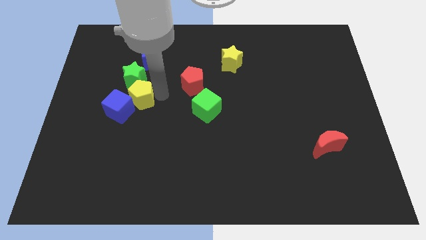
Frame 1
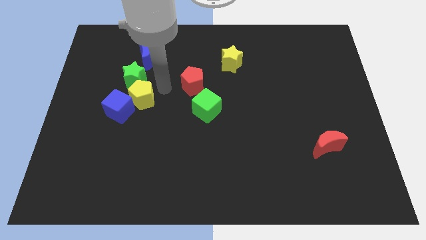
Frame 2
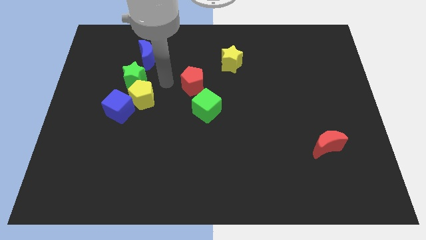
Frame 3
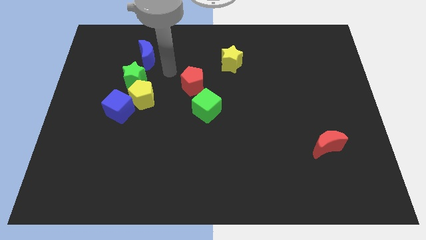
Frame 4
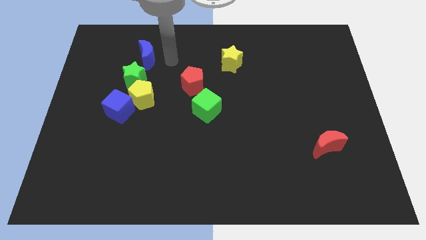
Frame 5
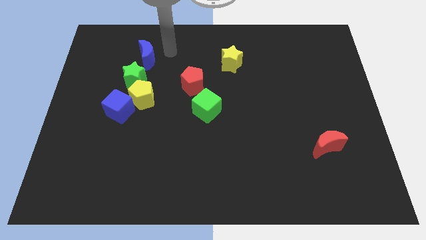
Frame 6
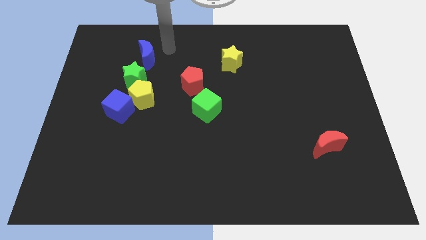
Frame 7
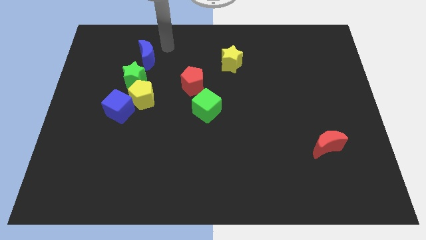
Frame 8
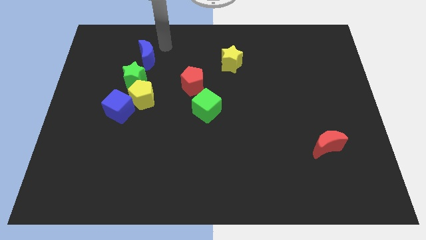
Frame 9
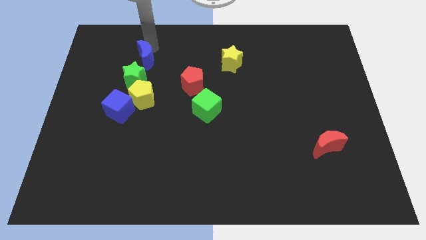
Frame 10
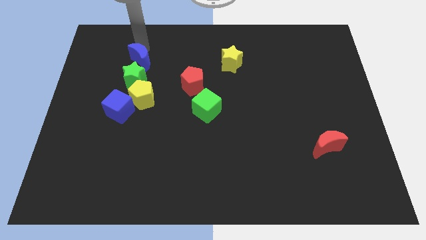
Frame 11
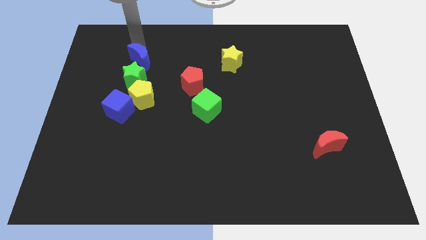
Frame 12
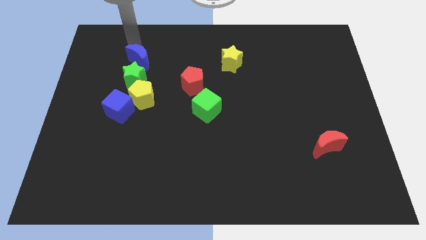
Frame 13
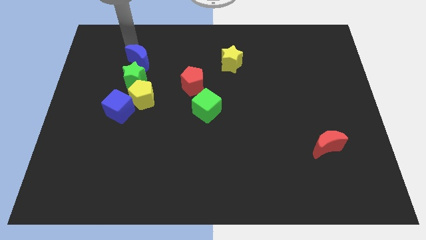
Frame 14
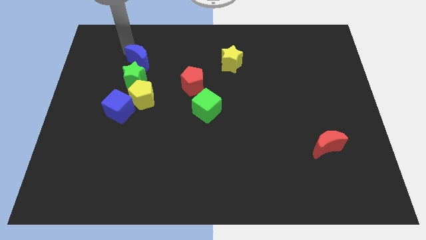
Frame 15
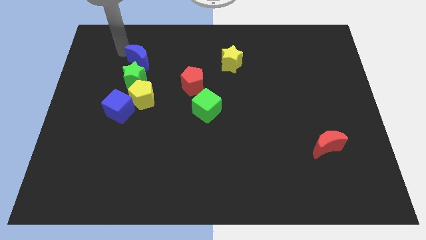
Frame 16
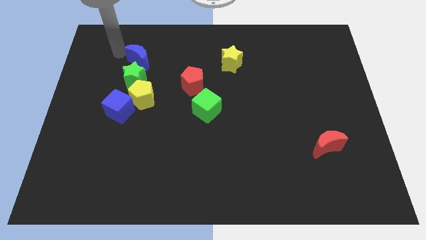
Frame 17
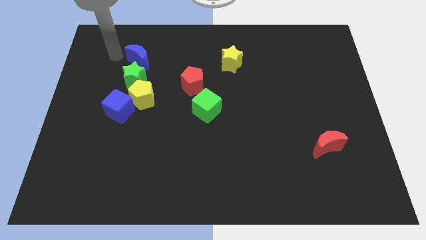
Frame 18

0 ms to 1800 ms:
slightly move the blue moon towards the left

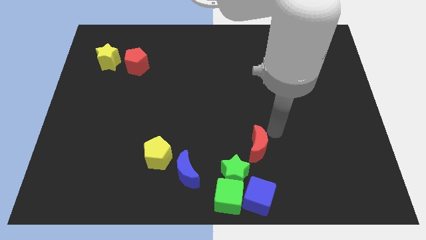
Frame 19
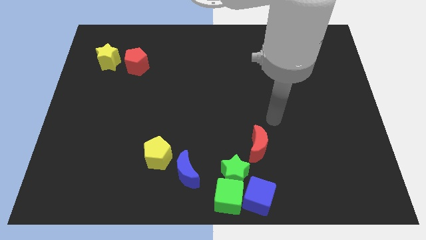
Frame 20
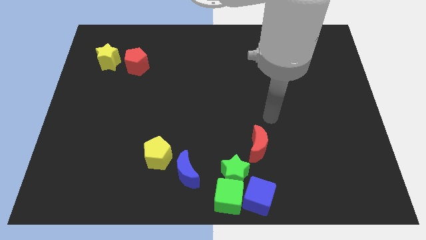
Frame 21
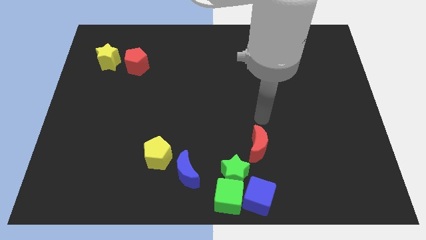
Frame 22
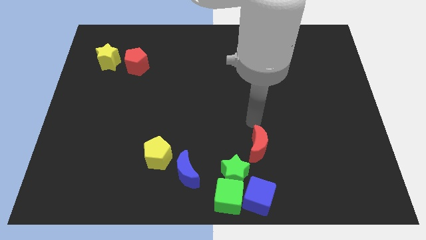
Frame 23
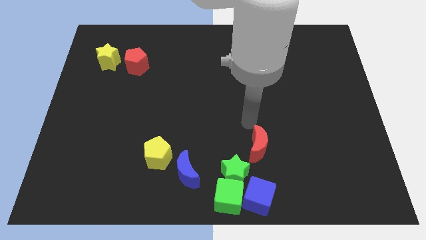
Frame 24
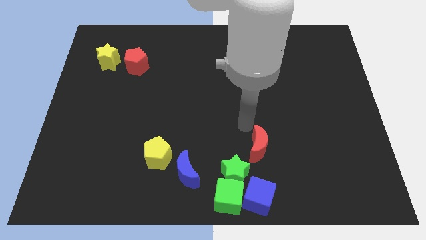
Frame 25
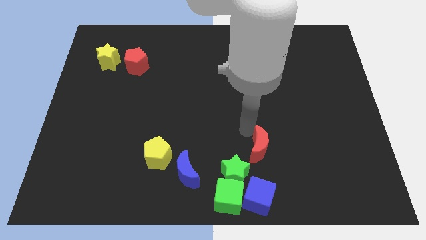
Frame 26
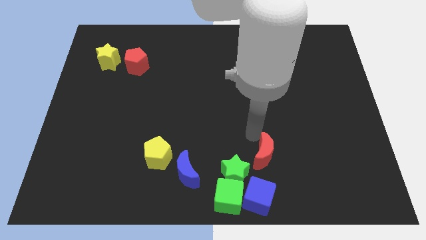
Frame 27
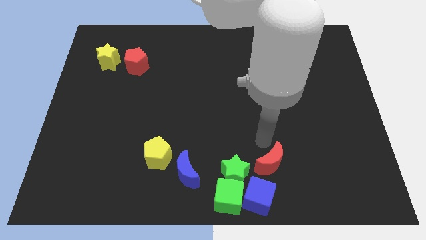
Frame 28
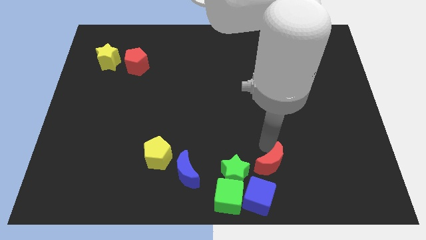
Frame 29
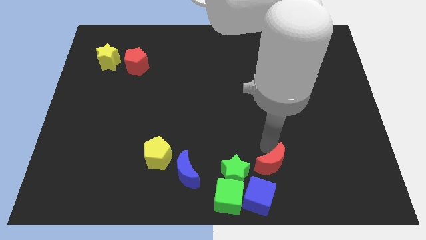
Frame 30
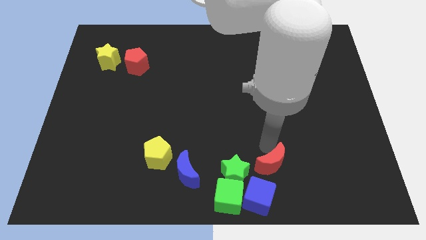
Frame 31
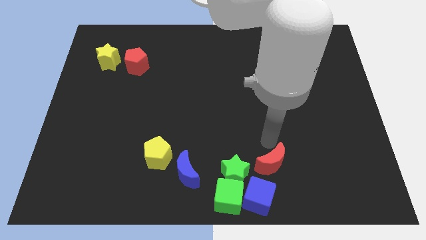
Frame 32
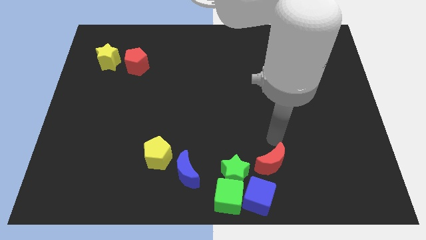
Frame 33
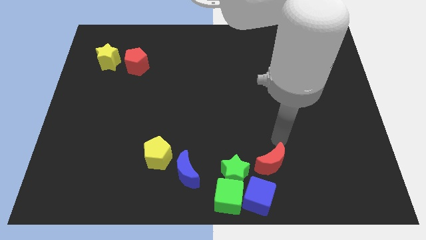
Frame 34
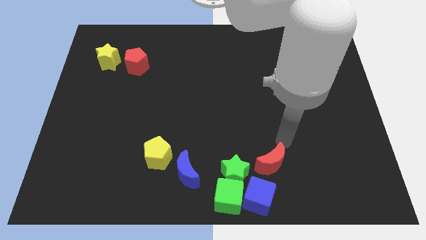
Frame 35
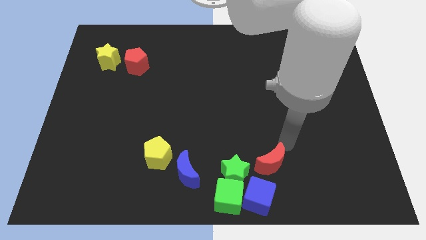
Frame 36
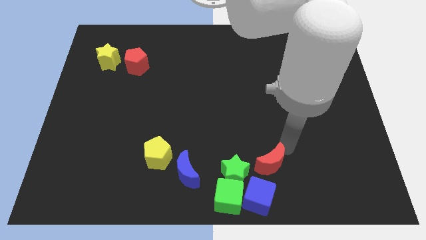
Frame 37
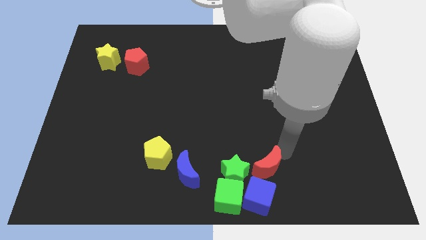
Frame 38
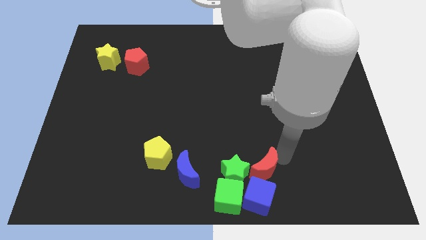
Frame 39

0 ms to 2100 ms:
place the red moon to the right of the green star

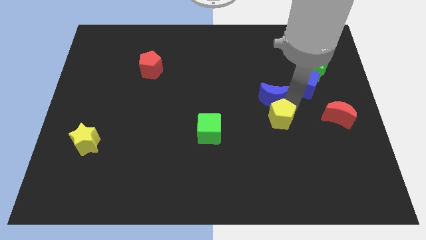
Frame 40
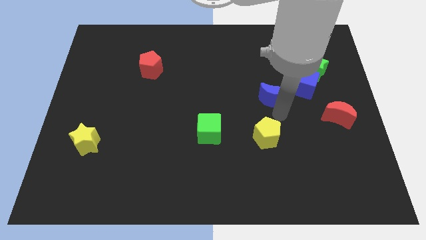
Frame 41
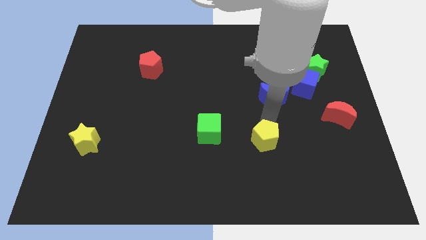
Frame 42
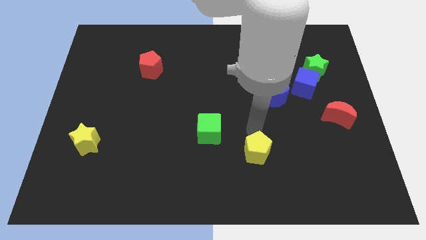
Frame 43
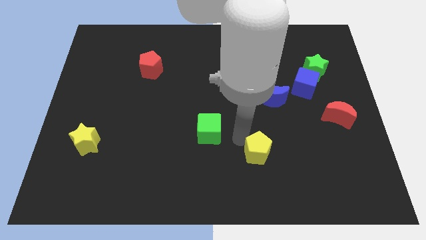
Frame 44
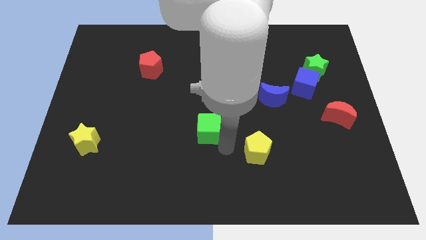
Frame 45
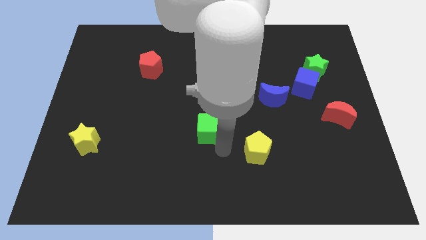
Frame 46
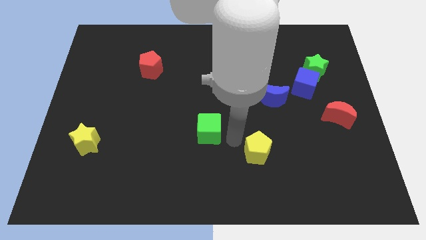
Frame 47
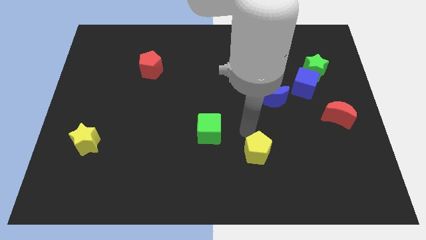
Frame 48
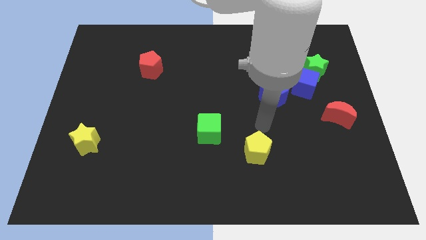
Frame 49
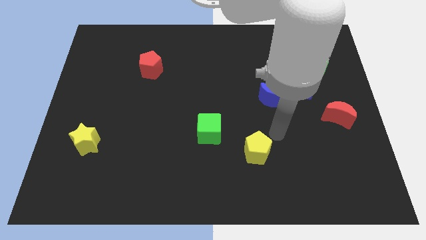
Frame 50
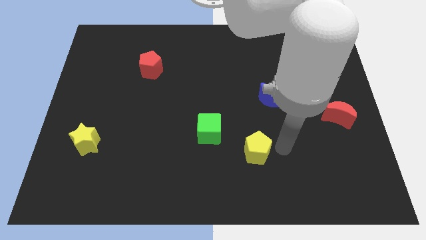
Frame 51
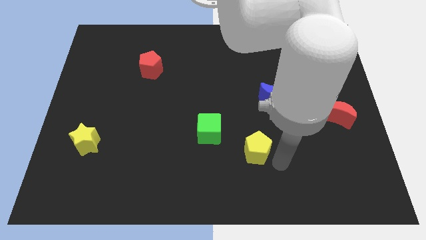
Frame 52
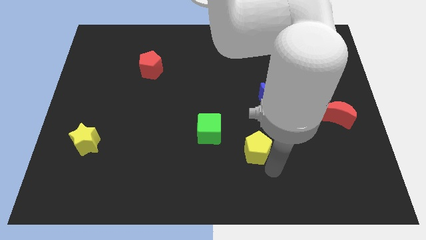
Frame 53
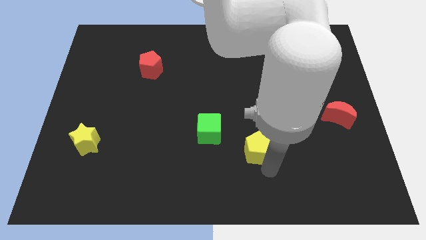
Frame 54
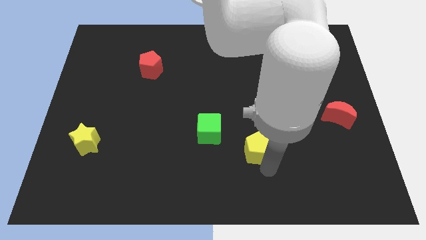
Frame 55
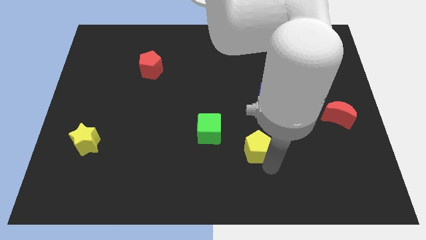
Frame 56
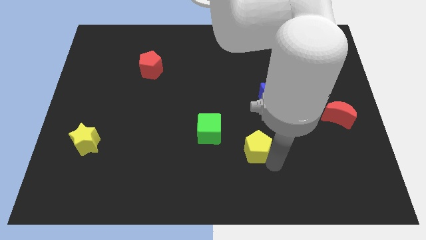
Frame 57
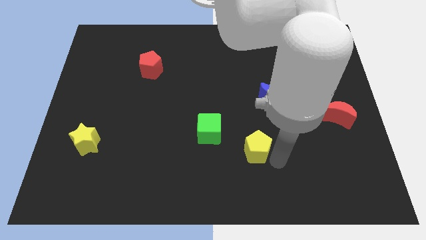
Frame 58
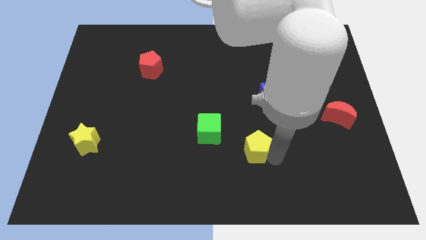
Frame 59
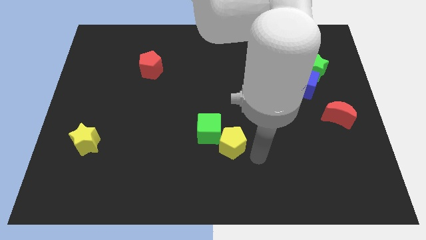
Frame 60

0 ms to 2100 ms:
push yellow pentagon into green cube

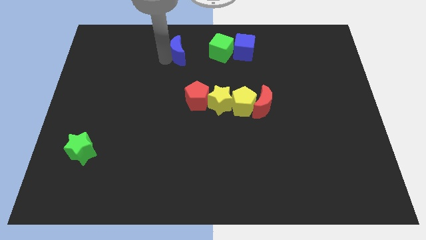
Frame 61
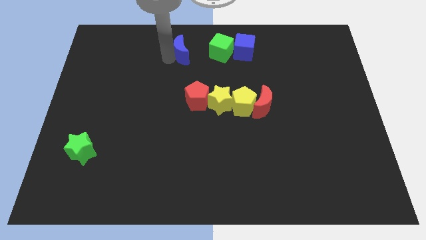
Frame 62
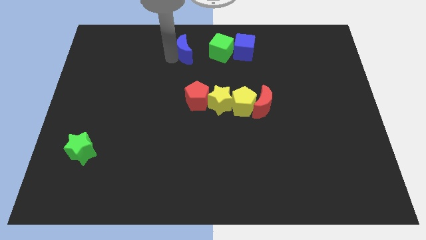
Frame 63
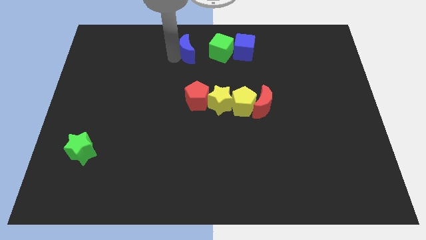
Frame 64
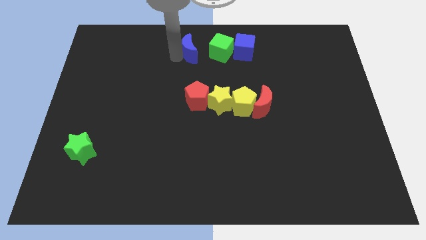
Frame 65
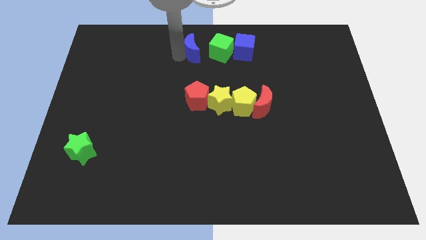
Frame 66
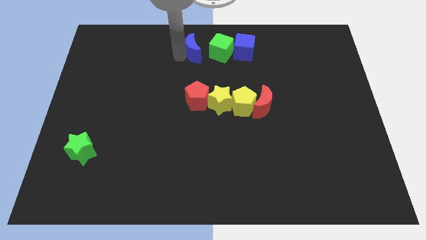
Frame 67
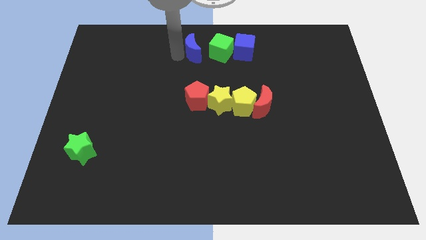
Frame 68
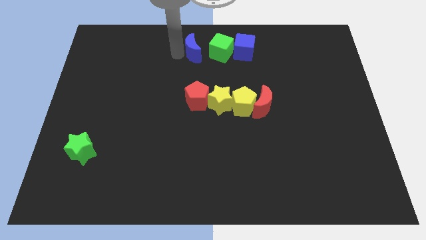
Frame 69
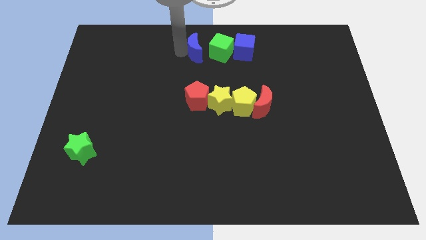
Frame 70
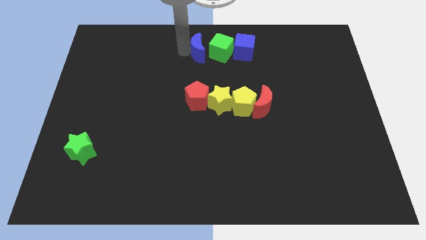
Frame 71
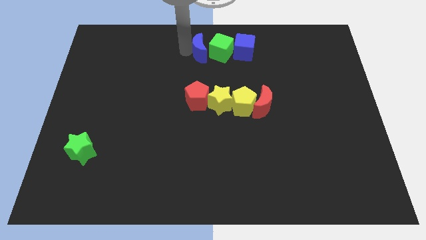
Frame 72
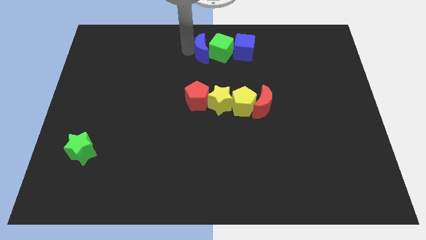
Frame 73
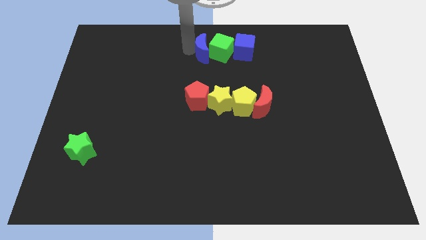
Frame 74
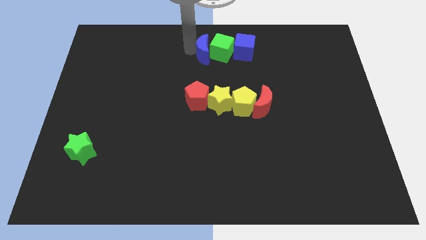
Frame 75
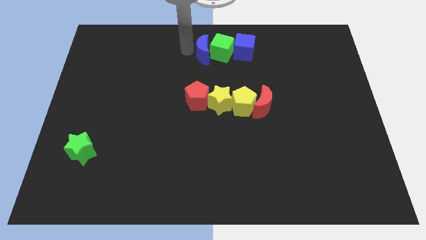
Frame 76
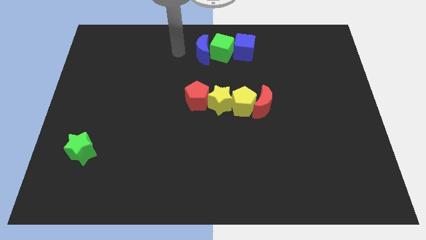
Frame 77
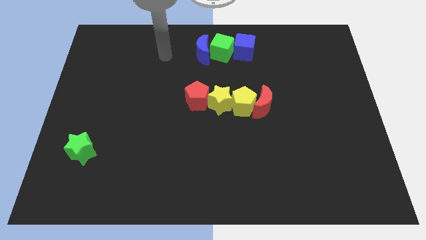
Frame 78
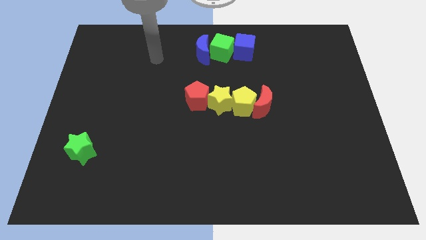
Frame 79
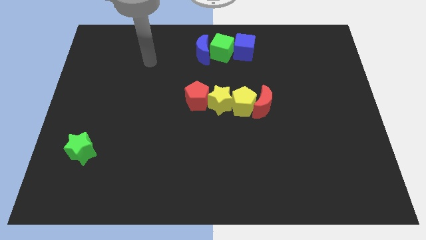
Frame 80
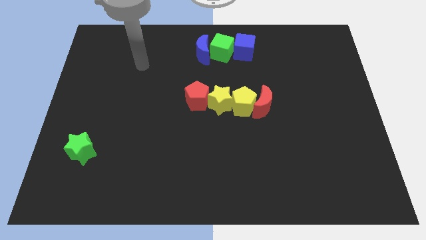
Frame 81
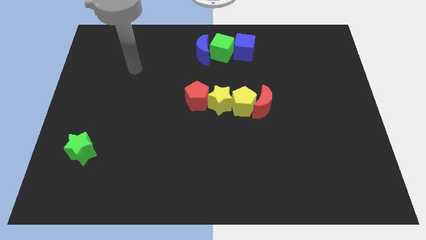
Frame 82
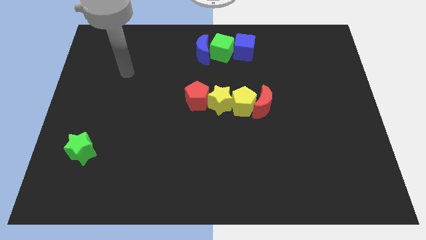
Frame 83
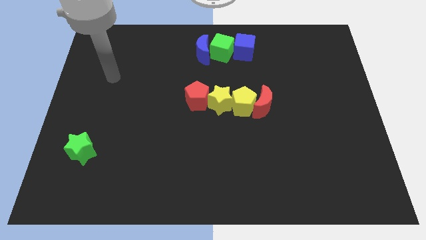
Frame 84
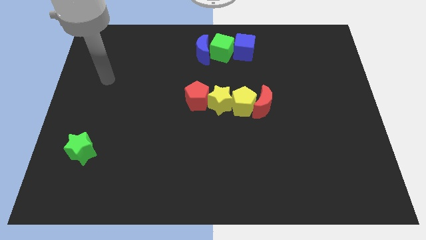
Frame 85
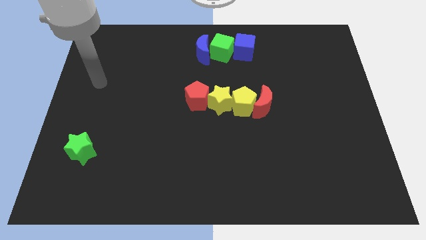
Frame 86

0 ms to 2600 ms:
move the blue crescent into the green cube

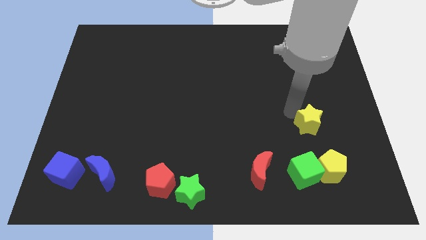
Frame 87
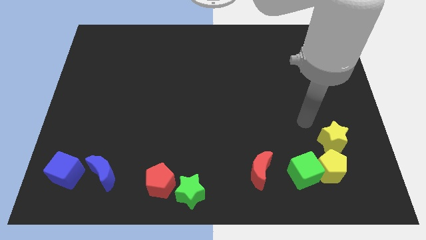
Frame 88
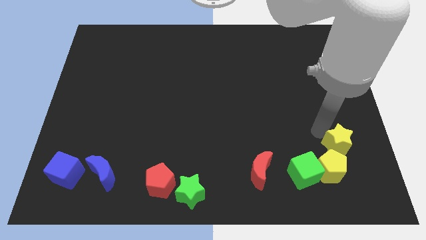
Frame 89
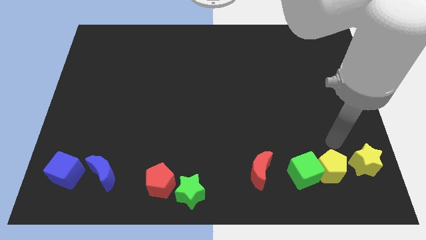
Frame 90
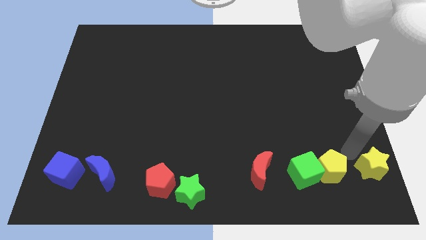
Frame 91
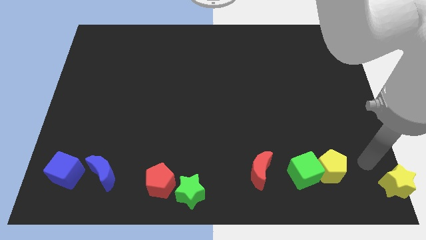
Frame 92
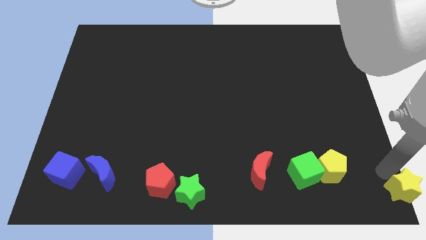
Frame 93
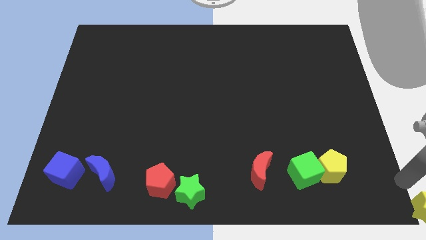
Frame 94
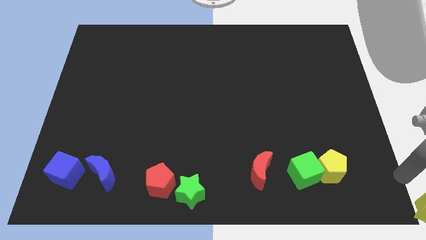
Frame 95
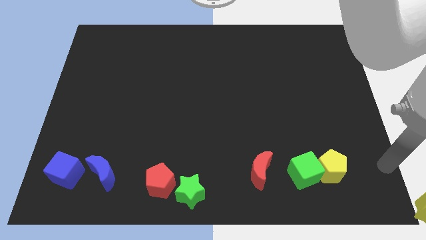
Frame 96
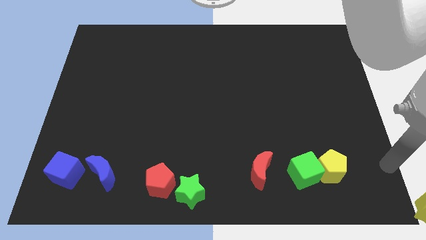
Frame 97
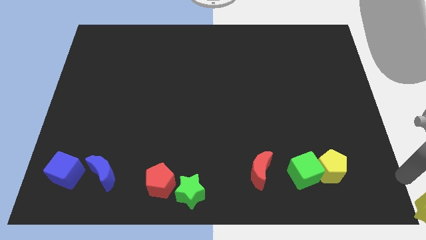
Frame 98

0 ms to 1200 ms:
place the yellow star towards the bottom right corner of the board
